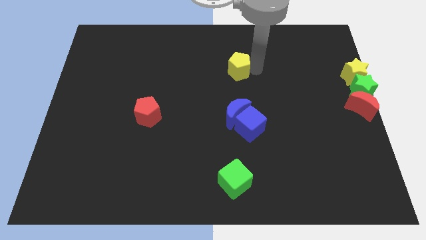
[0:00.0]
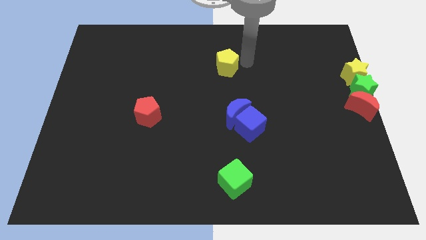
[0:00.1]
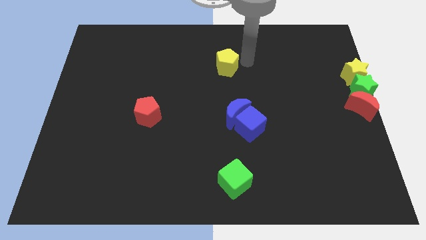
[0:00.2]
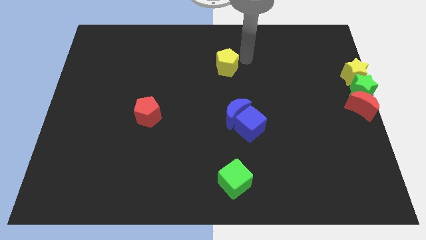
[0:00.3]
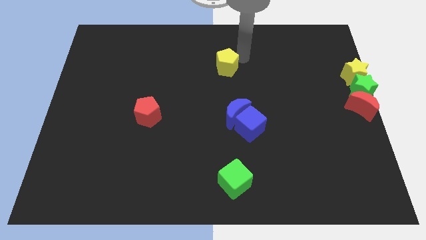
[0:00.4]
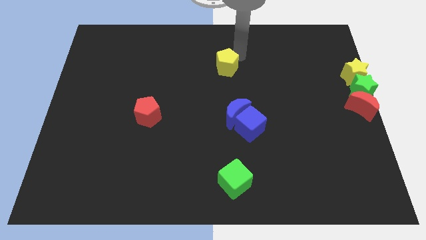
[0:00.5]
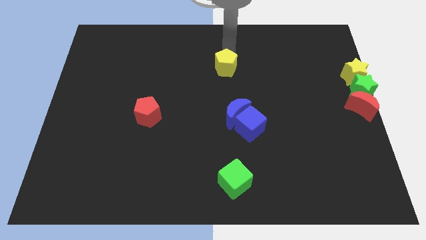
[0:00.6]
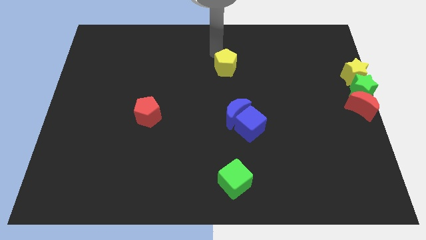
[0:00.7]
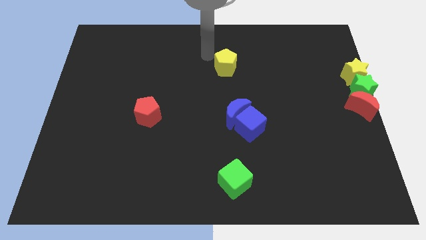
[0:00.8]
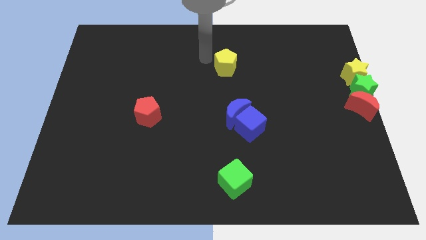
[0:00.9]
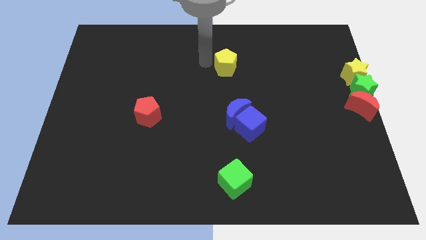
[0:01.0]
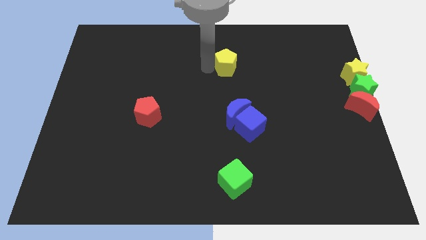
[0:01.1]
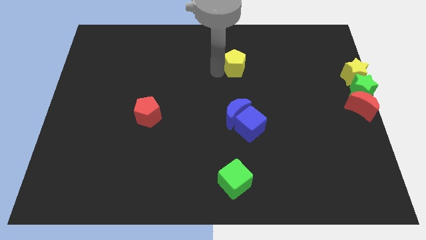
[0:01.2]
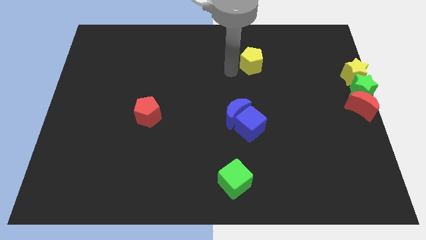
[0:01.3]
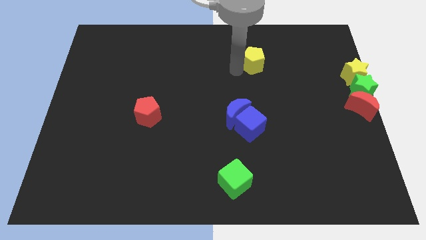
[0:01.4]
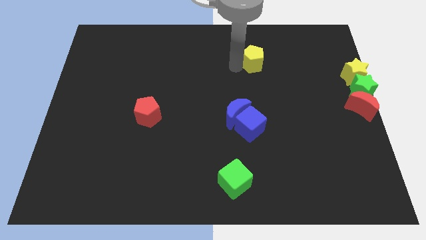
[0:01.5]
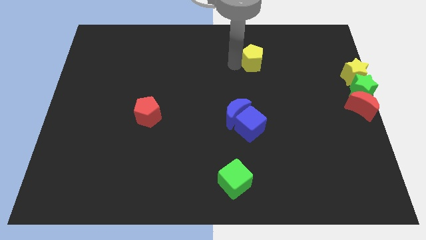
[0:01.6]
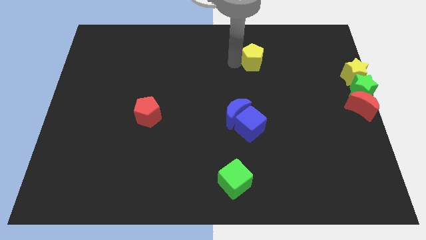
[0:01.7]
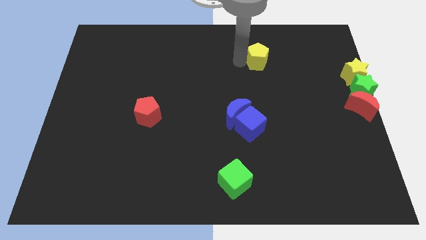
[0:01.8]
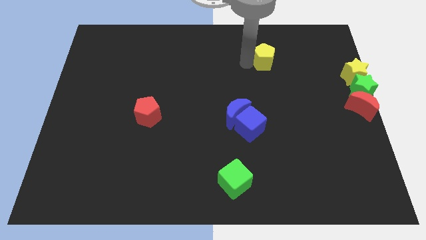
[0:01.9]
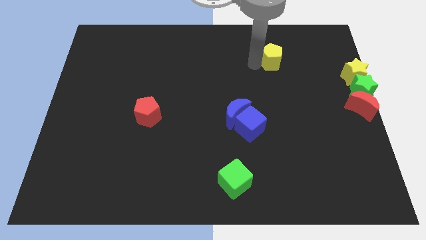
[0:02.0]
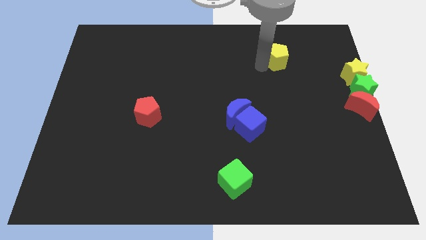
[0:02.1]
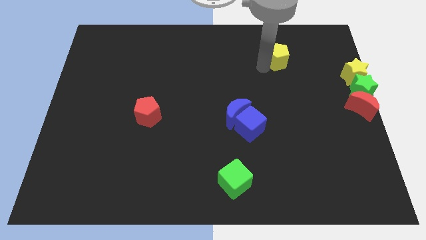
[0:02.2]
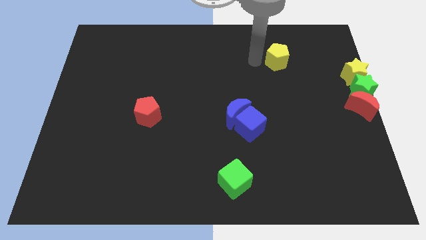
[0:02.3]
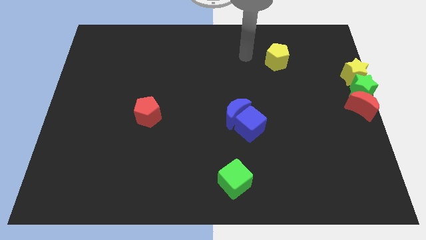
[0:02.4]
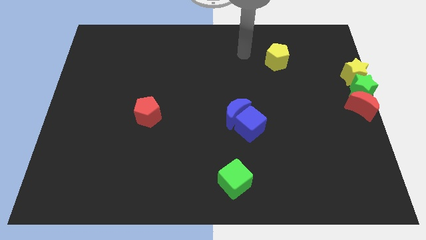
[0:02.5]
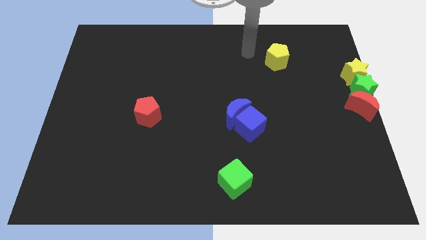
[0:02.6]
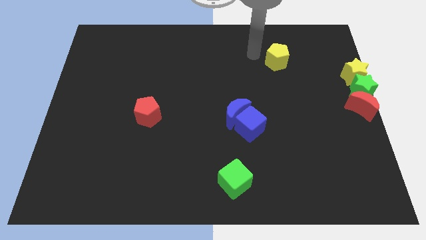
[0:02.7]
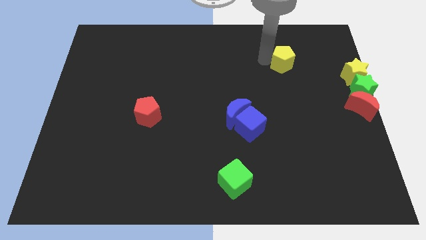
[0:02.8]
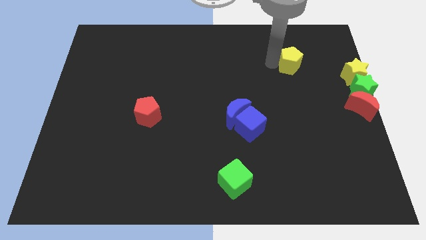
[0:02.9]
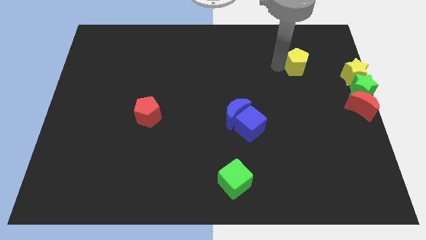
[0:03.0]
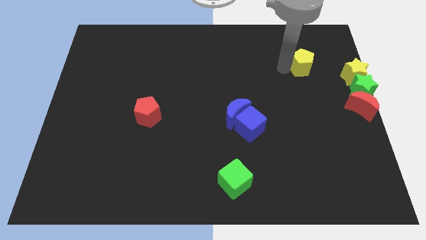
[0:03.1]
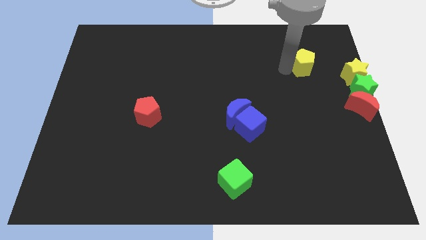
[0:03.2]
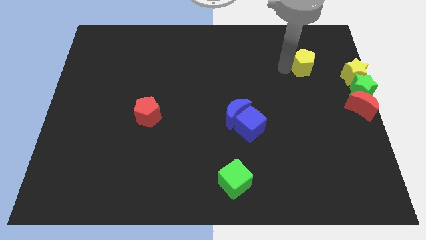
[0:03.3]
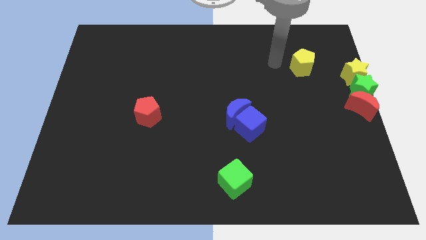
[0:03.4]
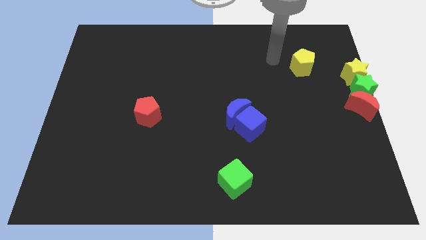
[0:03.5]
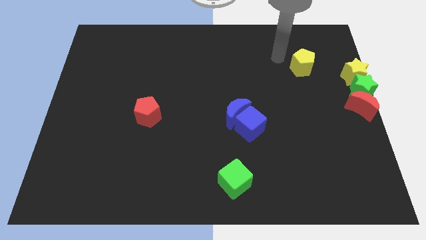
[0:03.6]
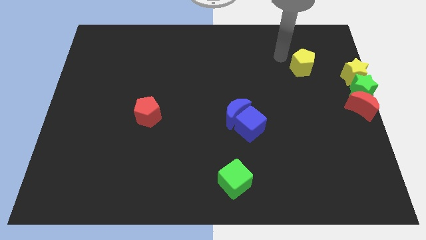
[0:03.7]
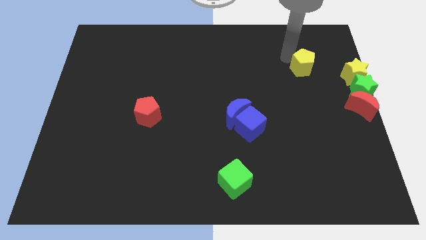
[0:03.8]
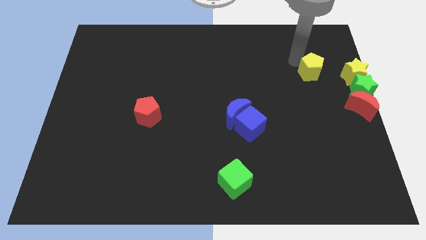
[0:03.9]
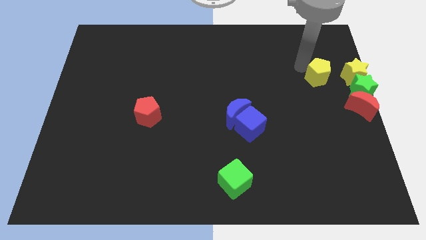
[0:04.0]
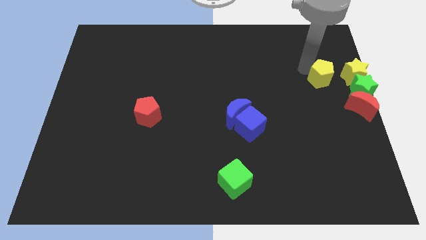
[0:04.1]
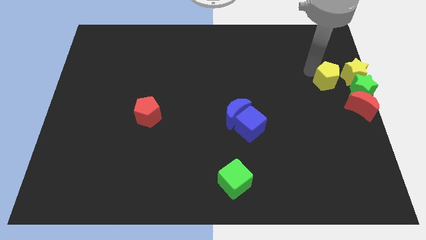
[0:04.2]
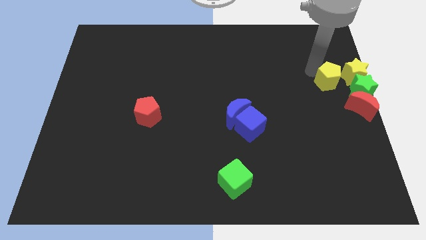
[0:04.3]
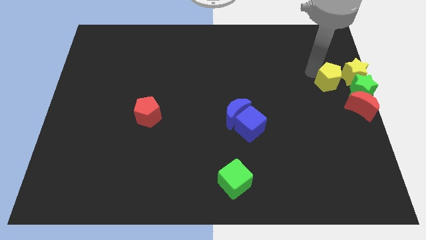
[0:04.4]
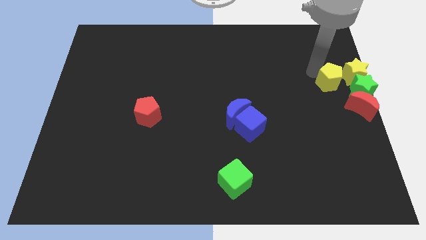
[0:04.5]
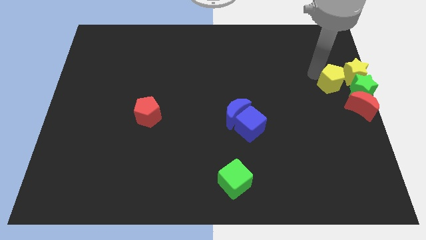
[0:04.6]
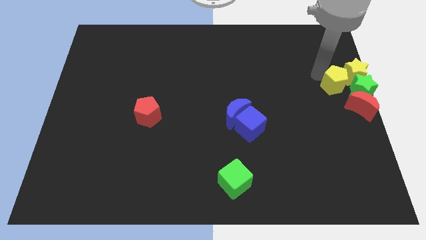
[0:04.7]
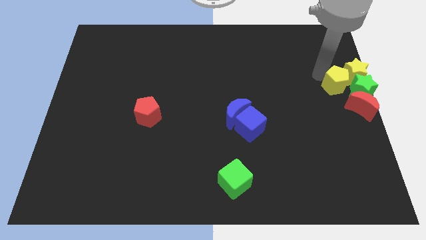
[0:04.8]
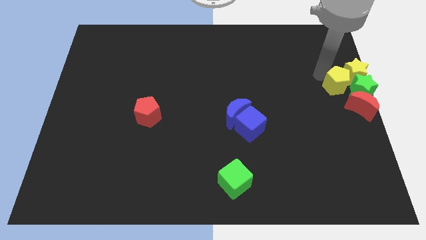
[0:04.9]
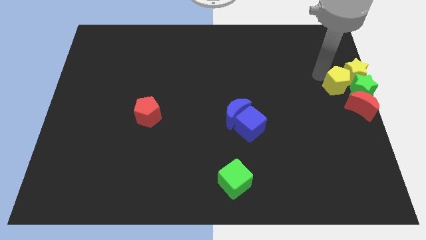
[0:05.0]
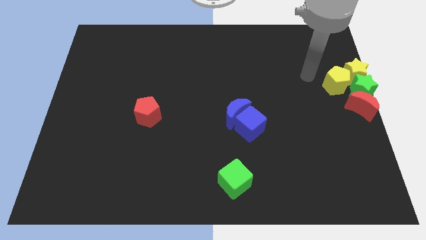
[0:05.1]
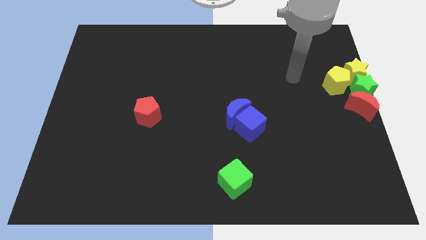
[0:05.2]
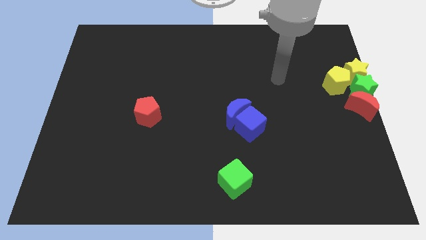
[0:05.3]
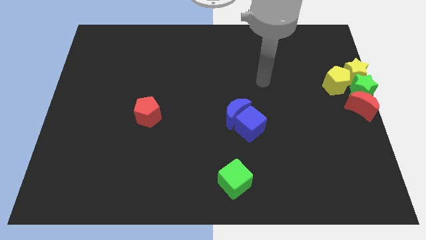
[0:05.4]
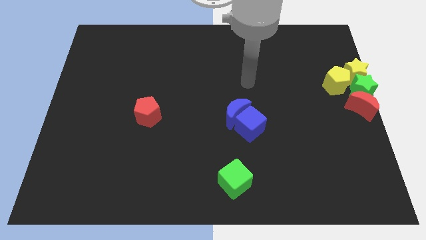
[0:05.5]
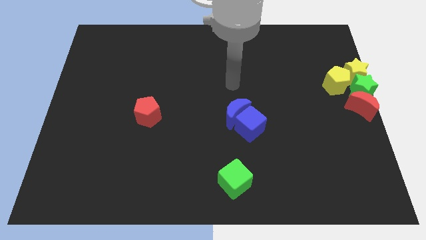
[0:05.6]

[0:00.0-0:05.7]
place yellow pentagon close to the yellow star

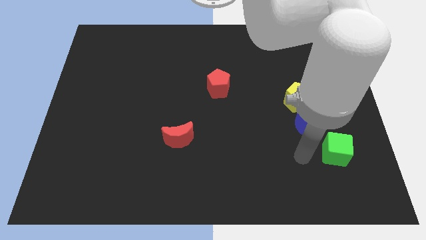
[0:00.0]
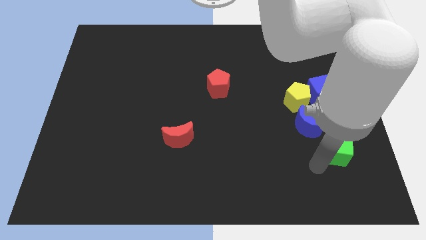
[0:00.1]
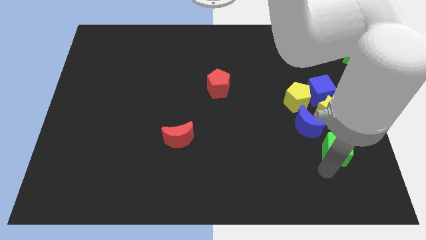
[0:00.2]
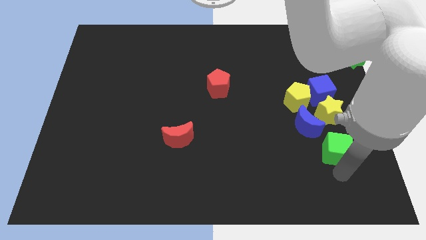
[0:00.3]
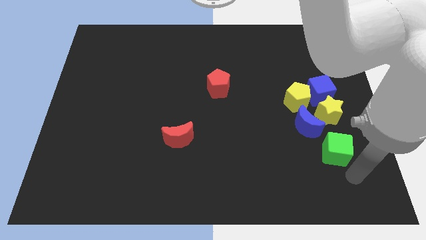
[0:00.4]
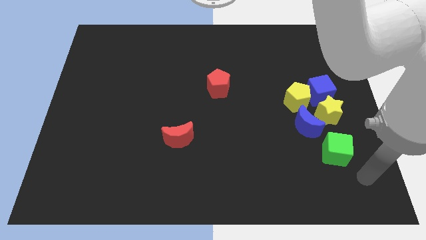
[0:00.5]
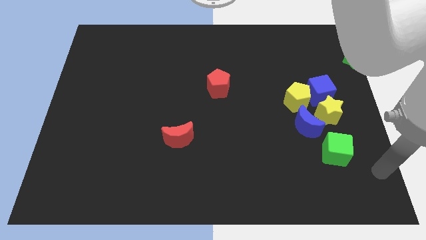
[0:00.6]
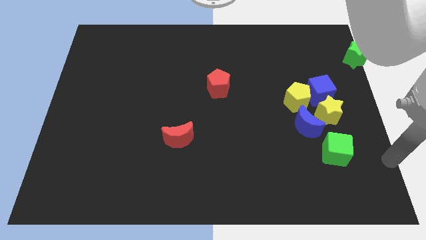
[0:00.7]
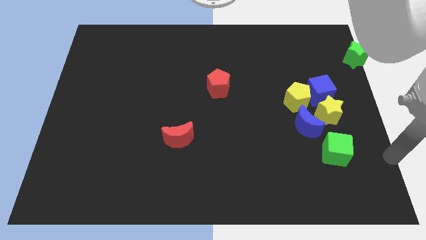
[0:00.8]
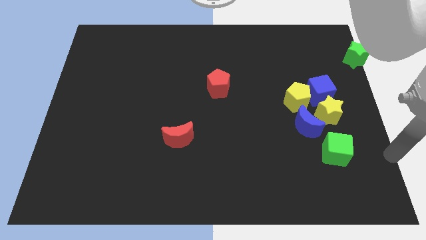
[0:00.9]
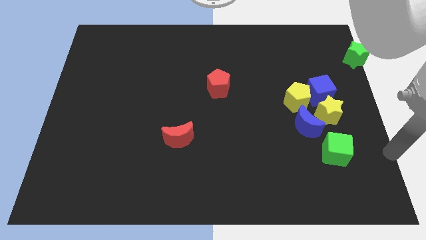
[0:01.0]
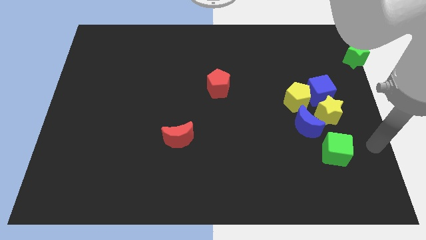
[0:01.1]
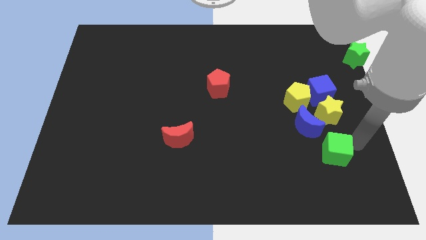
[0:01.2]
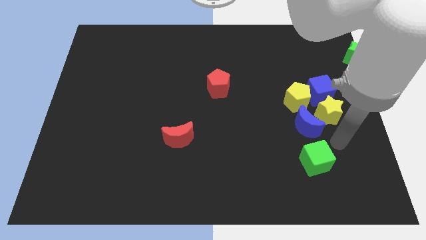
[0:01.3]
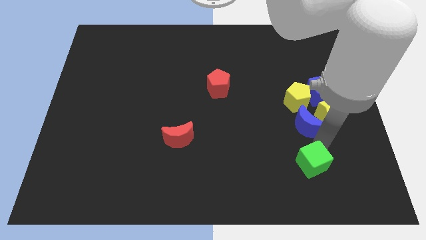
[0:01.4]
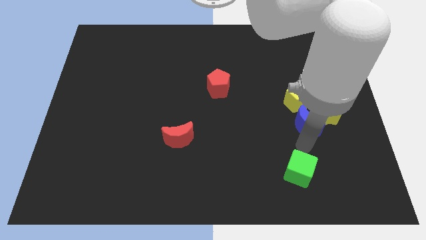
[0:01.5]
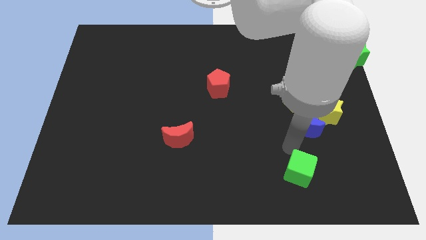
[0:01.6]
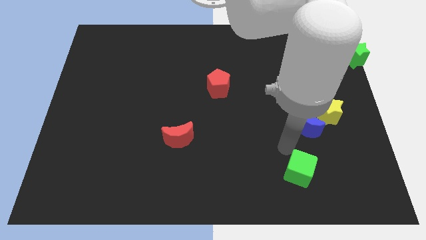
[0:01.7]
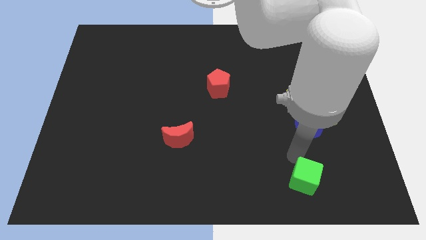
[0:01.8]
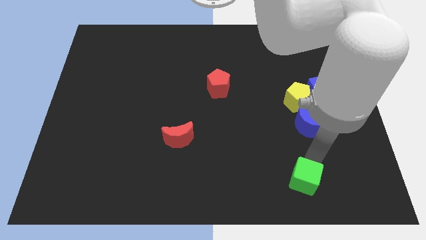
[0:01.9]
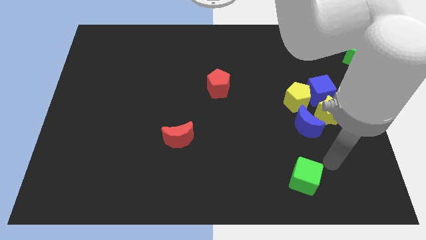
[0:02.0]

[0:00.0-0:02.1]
slide the green cube towards the bottom side of the board

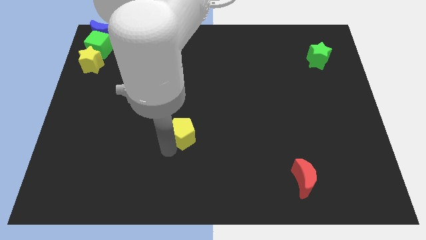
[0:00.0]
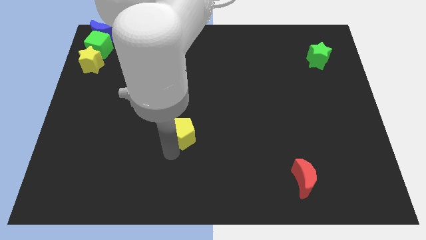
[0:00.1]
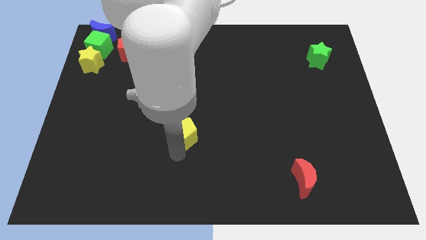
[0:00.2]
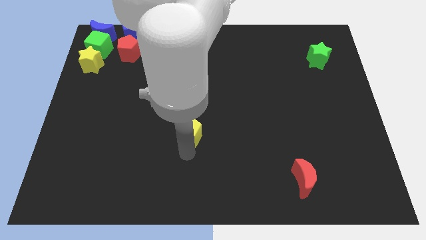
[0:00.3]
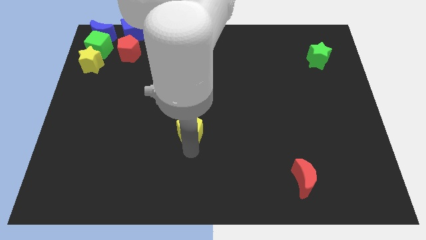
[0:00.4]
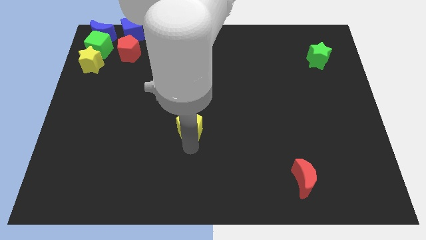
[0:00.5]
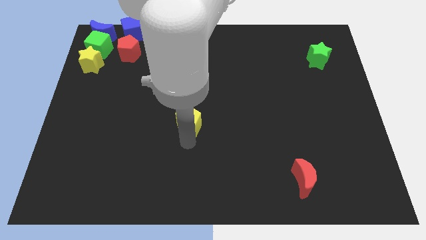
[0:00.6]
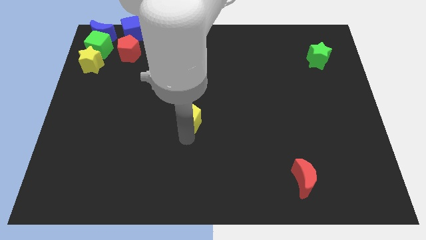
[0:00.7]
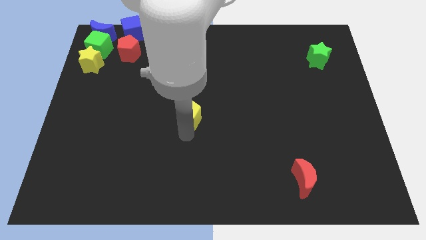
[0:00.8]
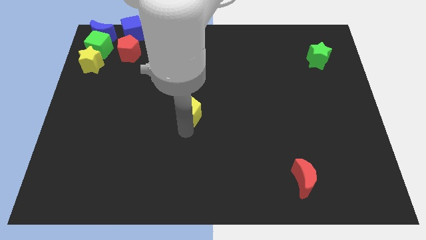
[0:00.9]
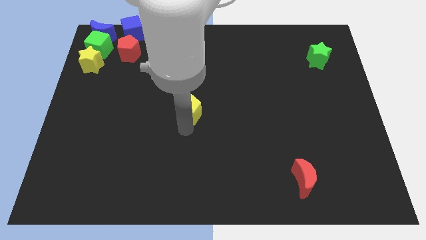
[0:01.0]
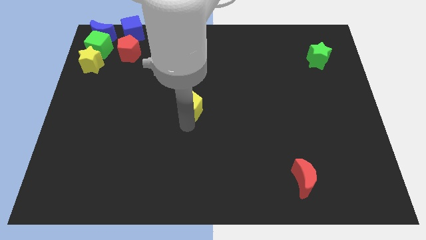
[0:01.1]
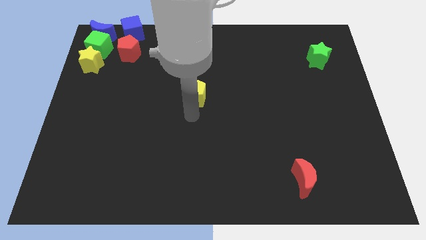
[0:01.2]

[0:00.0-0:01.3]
push yellow pentagon to the center
